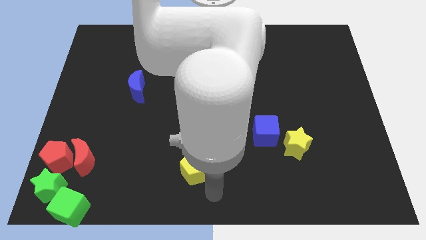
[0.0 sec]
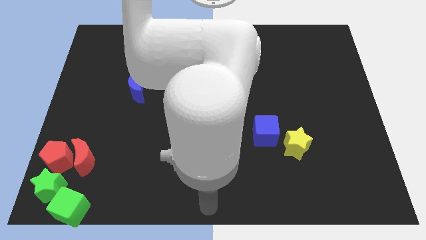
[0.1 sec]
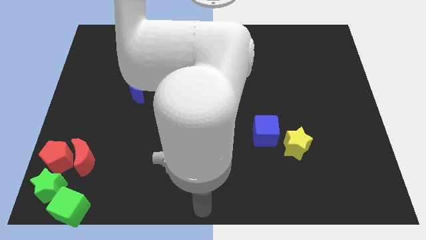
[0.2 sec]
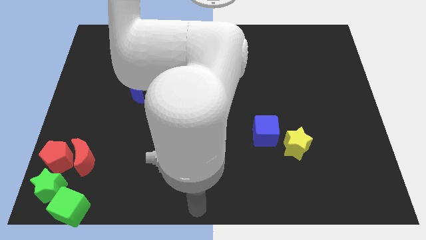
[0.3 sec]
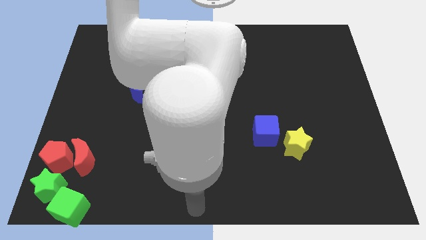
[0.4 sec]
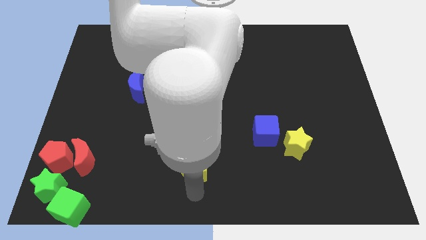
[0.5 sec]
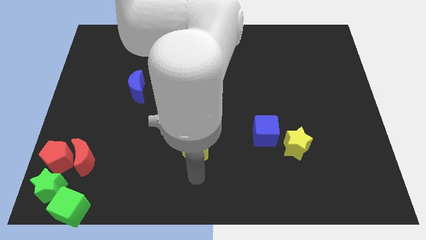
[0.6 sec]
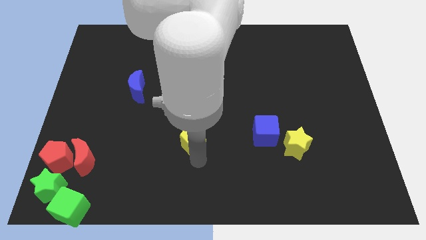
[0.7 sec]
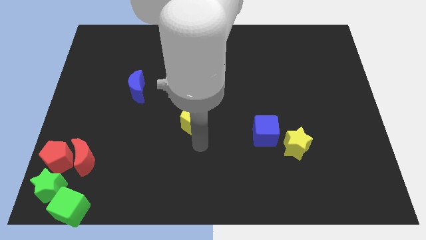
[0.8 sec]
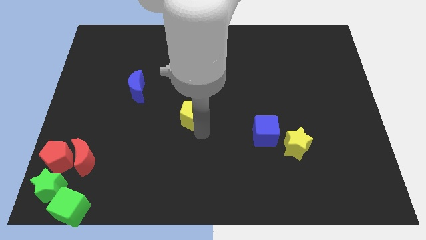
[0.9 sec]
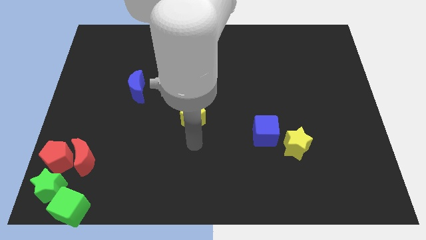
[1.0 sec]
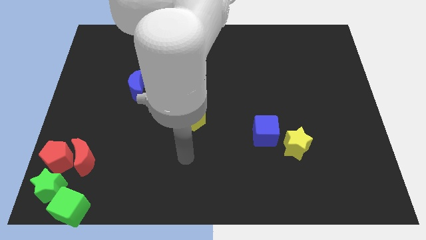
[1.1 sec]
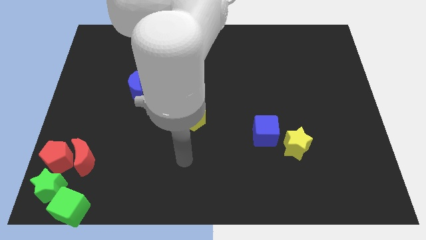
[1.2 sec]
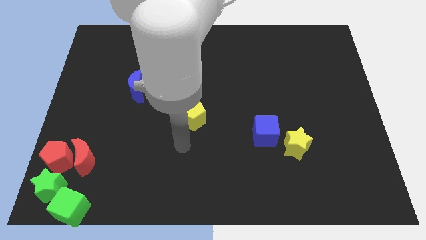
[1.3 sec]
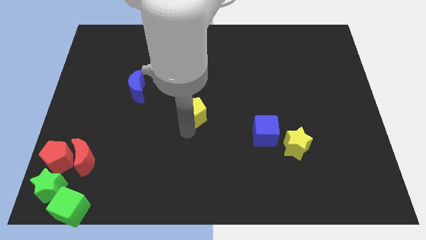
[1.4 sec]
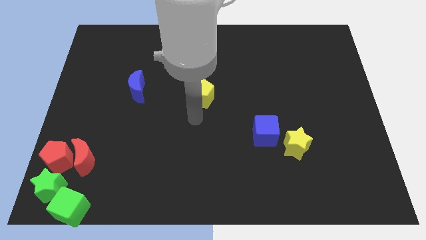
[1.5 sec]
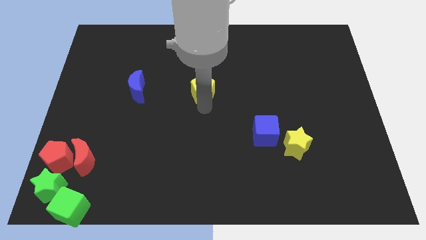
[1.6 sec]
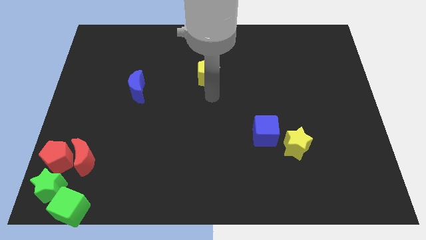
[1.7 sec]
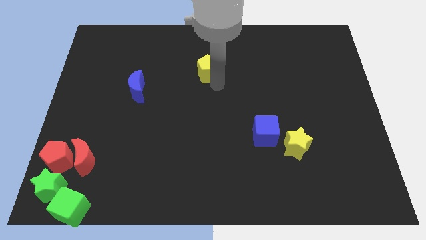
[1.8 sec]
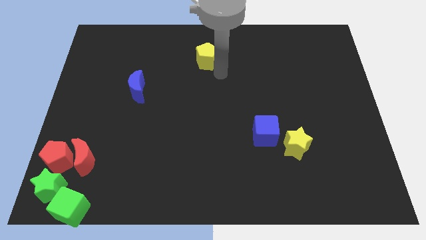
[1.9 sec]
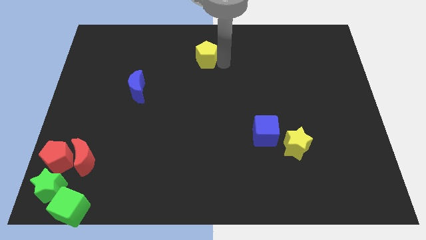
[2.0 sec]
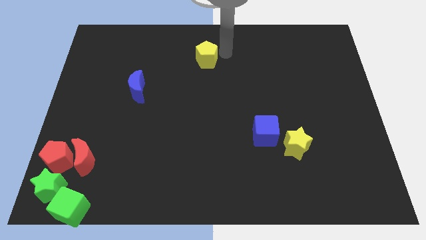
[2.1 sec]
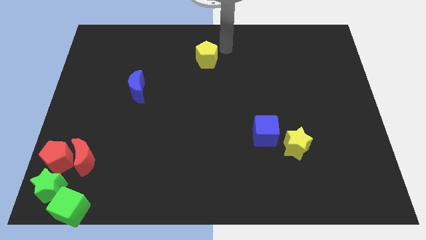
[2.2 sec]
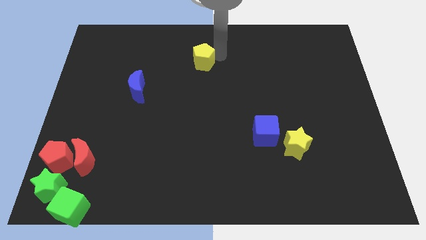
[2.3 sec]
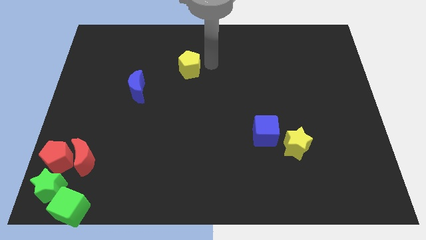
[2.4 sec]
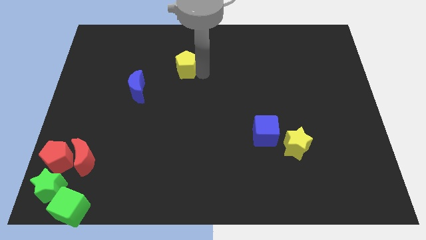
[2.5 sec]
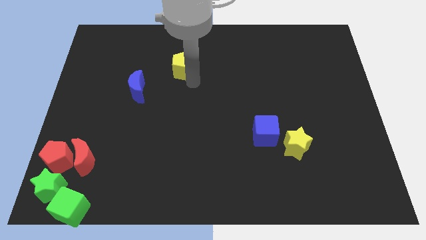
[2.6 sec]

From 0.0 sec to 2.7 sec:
push yellow pentagon towards top of the board

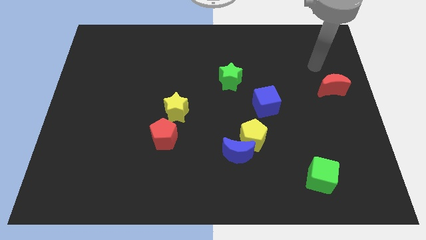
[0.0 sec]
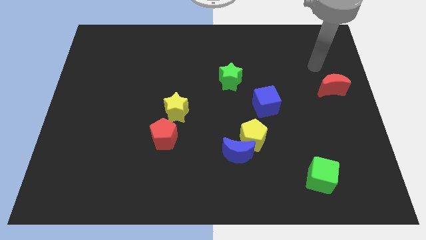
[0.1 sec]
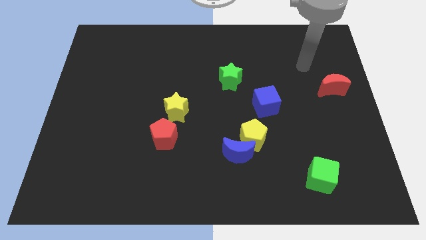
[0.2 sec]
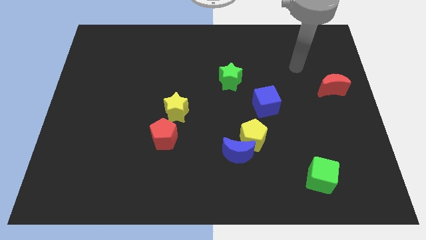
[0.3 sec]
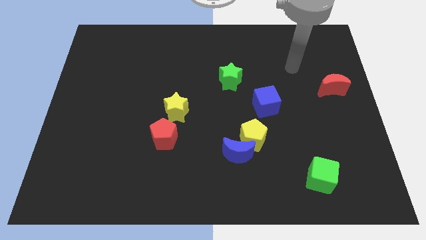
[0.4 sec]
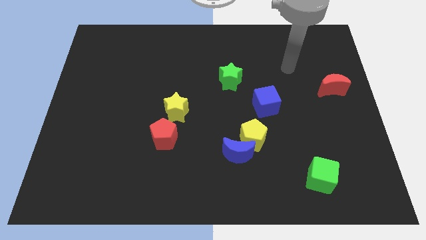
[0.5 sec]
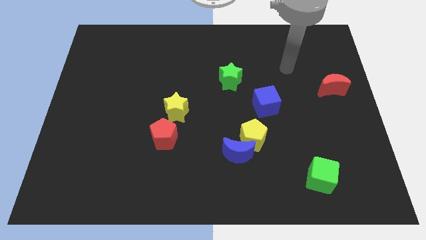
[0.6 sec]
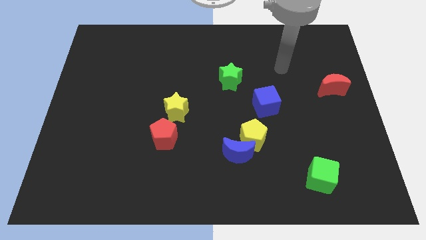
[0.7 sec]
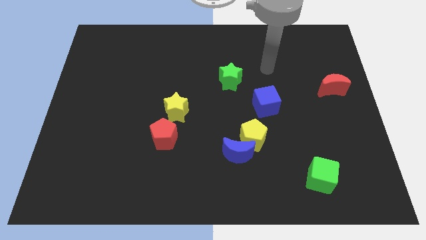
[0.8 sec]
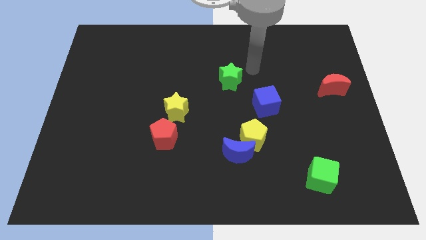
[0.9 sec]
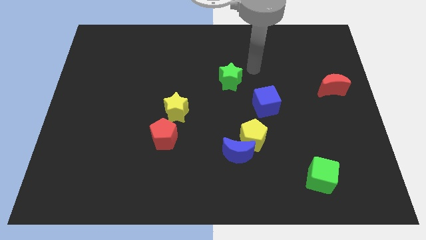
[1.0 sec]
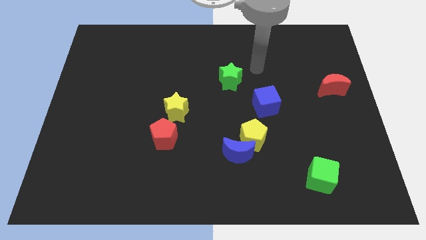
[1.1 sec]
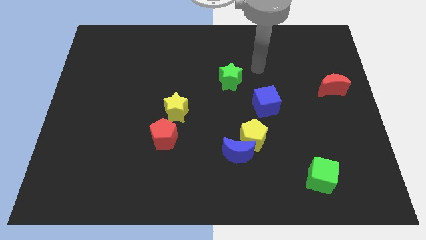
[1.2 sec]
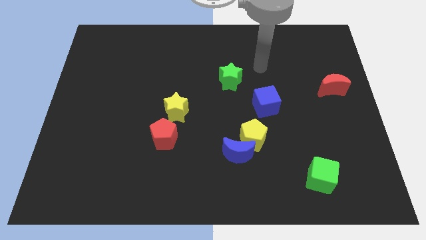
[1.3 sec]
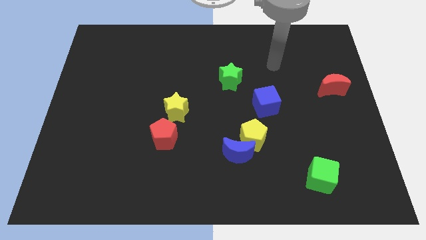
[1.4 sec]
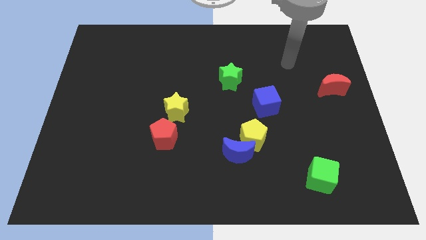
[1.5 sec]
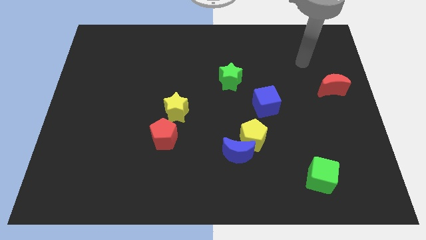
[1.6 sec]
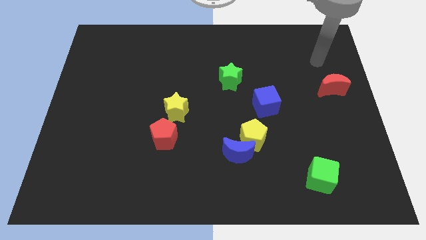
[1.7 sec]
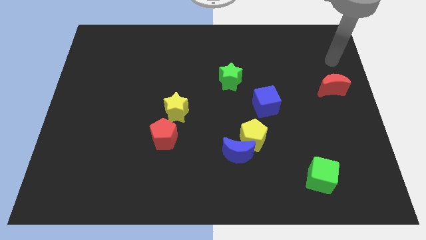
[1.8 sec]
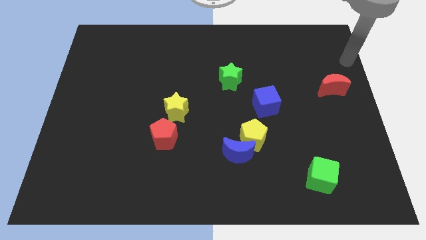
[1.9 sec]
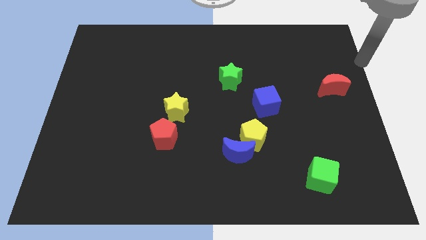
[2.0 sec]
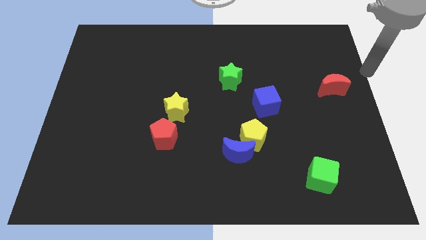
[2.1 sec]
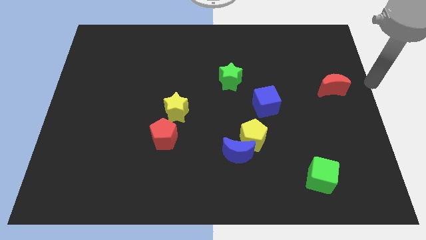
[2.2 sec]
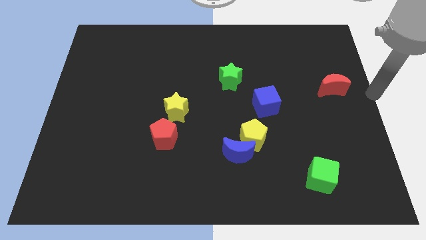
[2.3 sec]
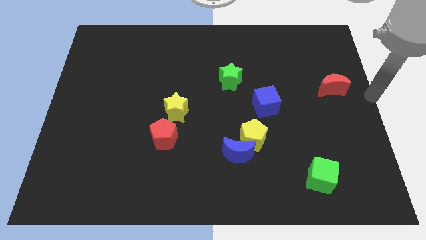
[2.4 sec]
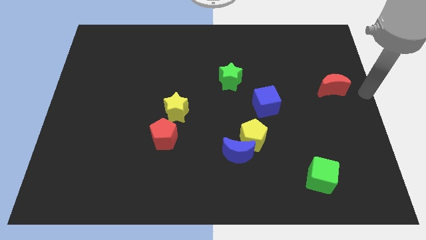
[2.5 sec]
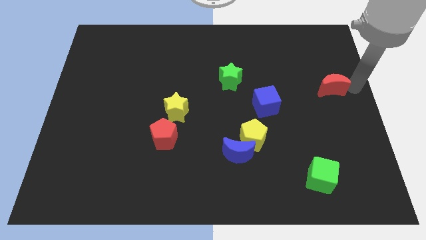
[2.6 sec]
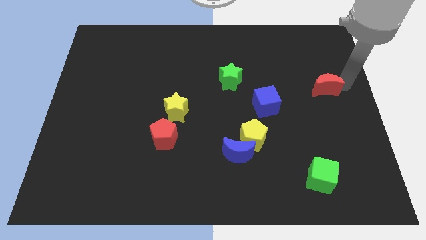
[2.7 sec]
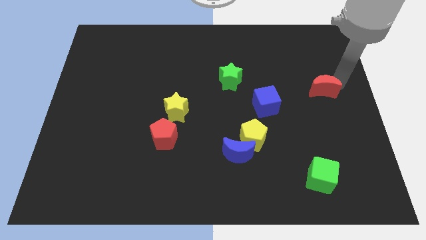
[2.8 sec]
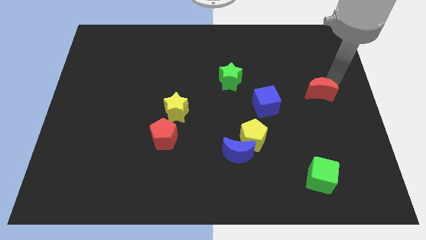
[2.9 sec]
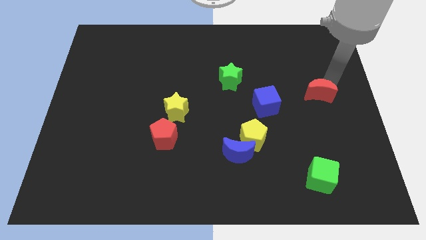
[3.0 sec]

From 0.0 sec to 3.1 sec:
move the red moon slightly to the center

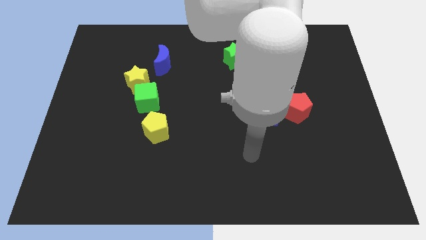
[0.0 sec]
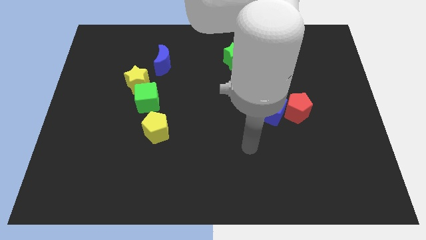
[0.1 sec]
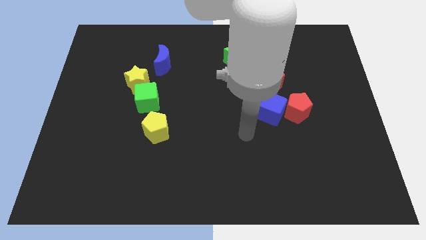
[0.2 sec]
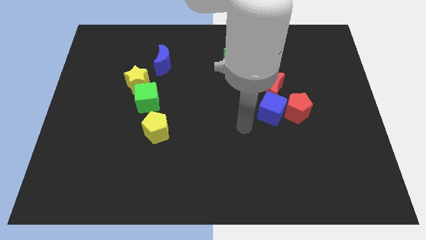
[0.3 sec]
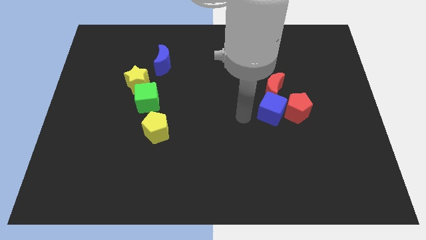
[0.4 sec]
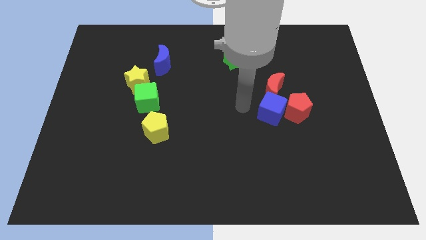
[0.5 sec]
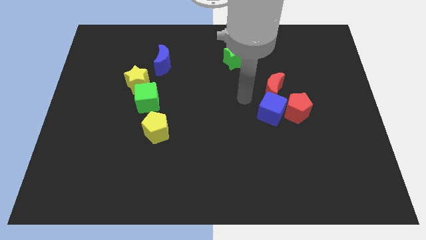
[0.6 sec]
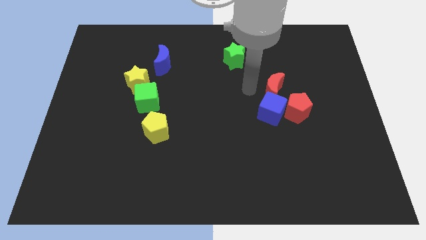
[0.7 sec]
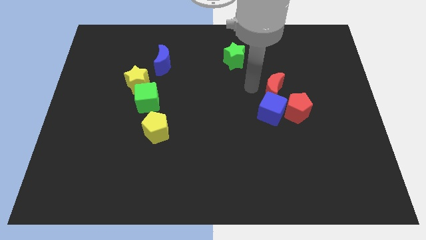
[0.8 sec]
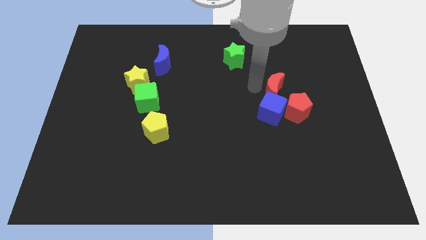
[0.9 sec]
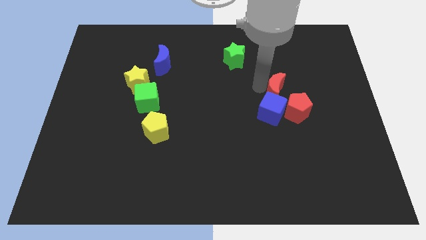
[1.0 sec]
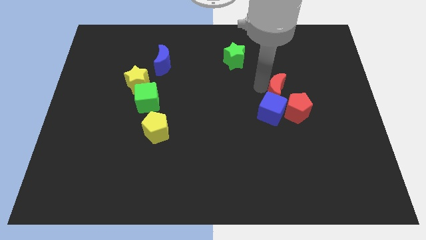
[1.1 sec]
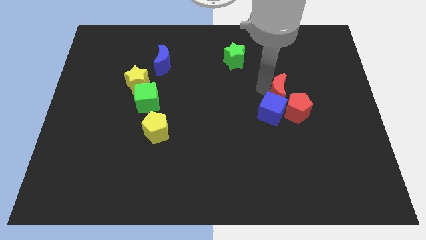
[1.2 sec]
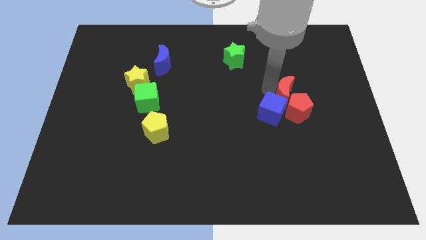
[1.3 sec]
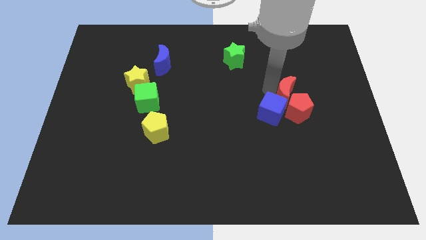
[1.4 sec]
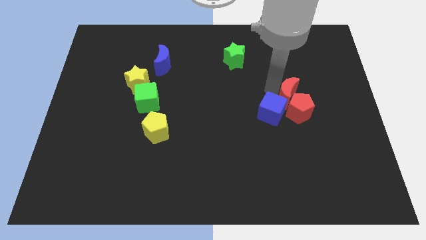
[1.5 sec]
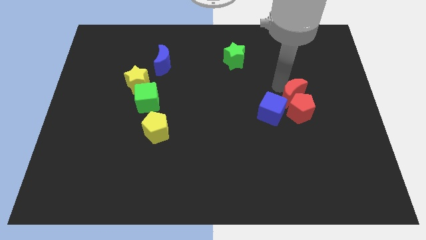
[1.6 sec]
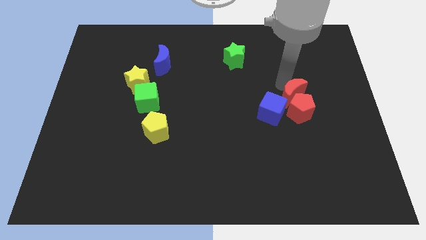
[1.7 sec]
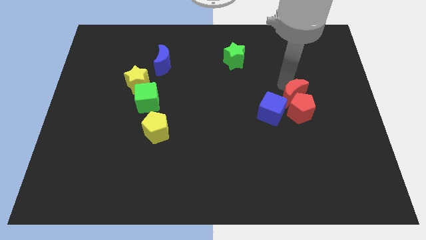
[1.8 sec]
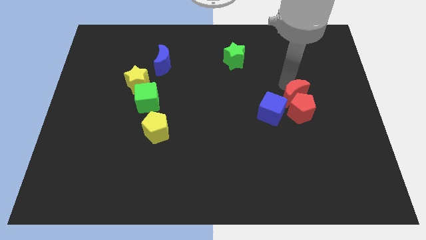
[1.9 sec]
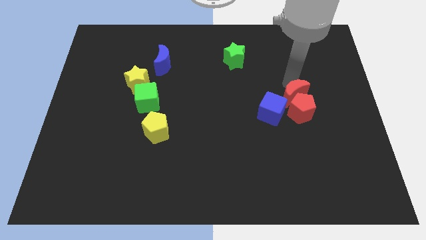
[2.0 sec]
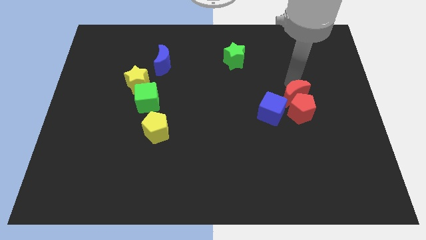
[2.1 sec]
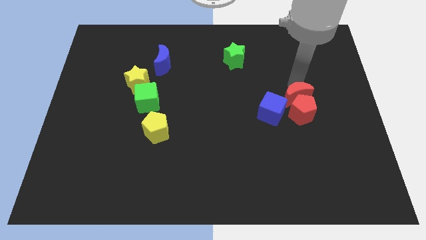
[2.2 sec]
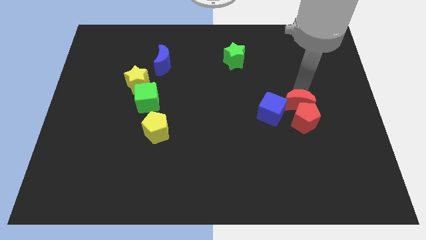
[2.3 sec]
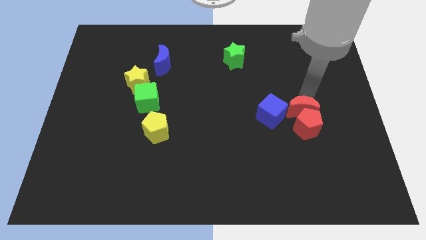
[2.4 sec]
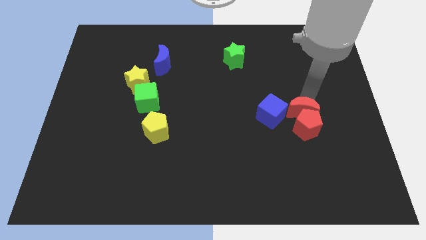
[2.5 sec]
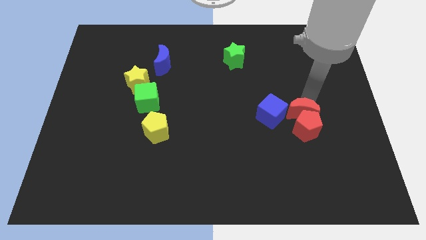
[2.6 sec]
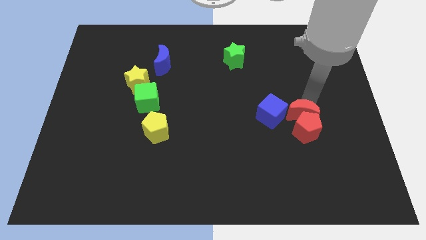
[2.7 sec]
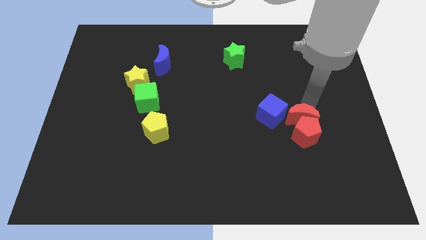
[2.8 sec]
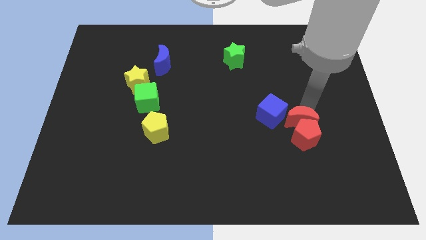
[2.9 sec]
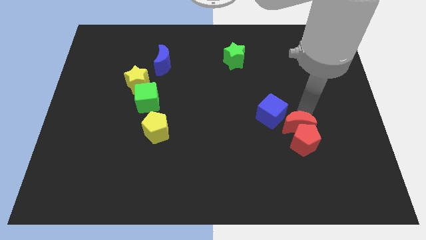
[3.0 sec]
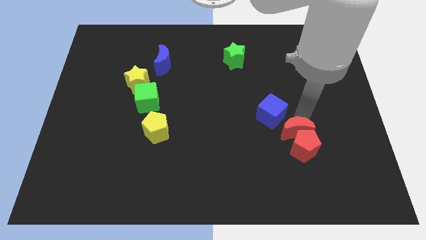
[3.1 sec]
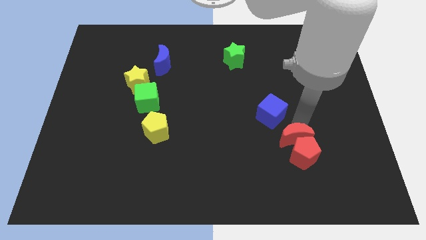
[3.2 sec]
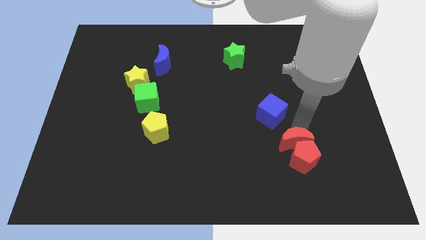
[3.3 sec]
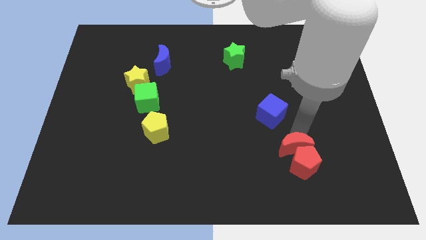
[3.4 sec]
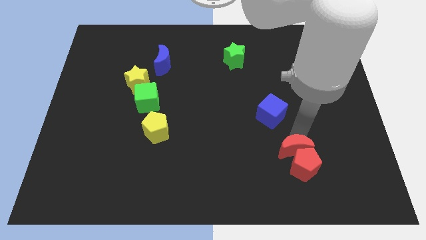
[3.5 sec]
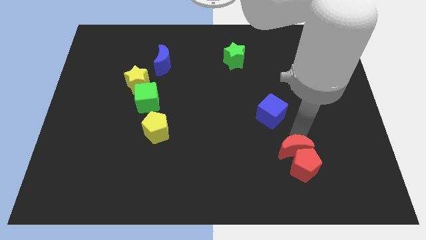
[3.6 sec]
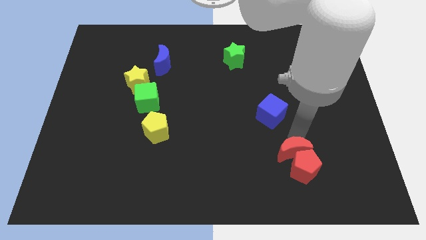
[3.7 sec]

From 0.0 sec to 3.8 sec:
move the red blocks towards the bottom side of the table
